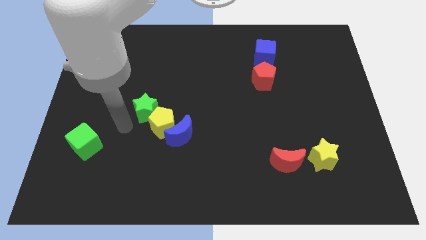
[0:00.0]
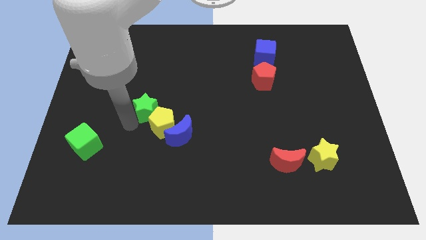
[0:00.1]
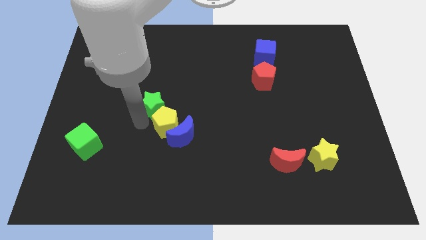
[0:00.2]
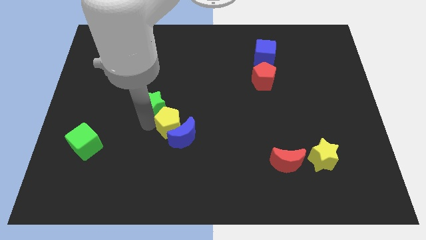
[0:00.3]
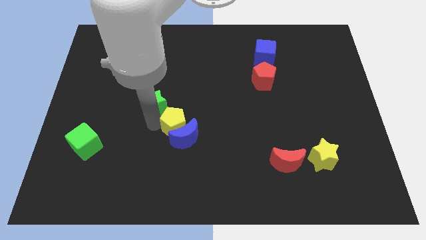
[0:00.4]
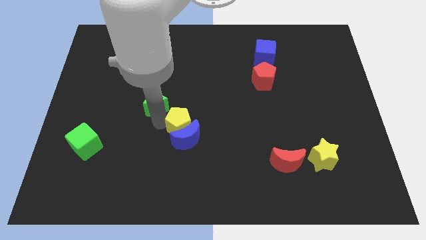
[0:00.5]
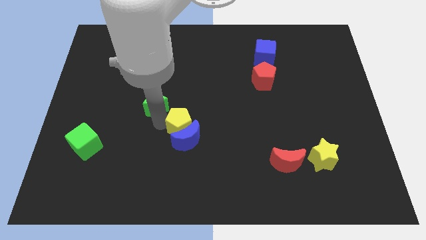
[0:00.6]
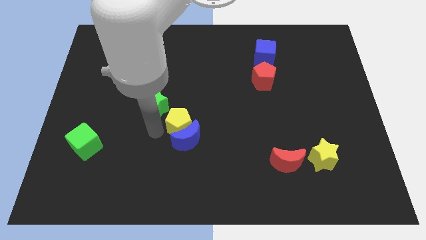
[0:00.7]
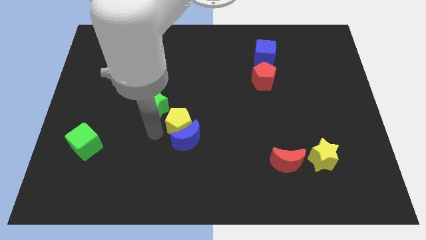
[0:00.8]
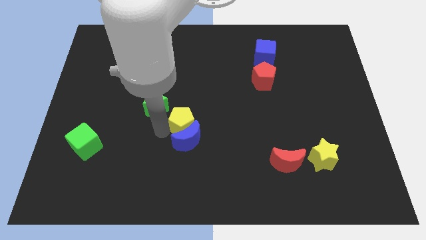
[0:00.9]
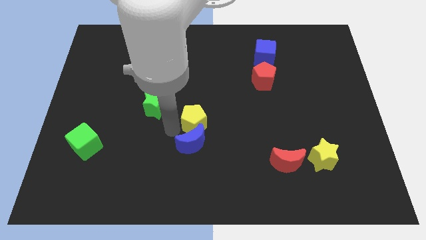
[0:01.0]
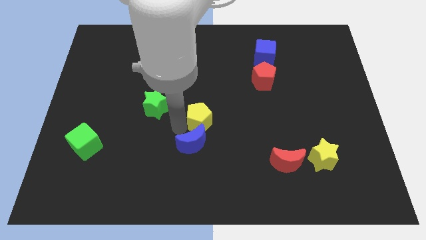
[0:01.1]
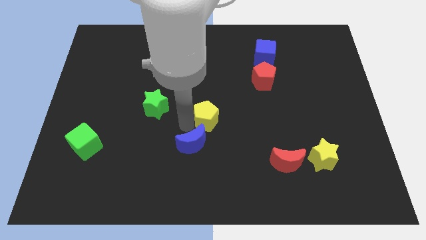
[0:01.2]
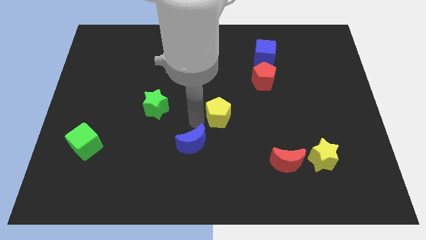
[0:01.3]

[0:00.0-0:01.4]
place yellow pentagon to the center of the board

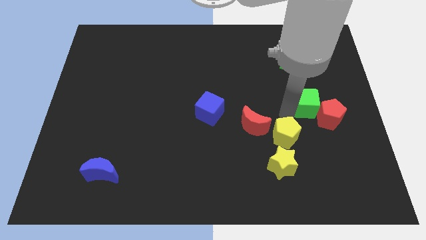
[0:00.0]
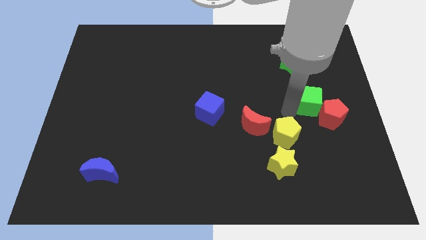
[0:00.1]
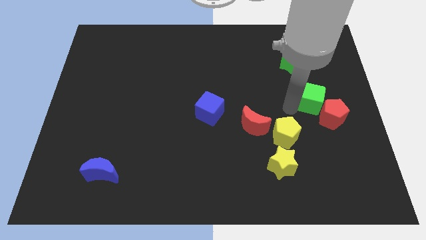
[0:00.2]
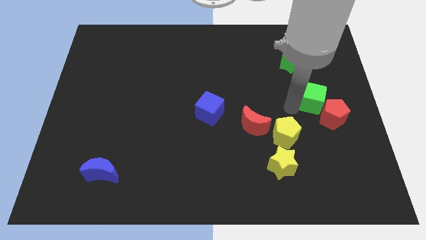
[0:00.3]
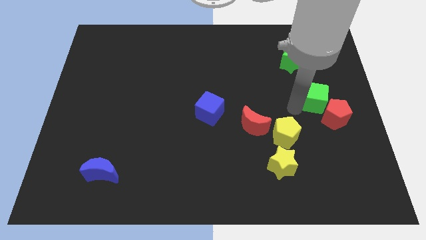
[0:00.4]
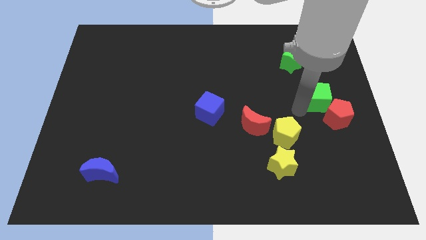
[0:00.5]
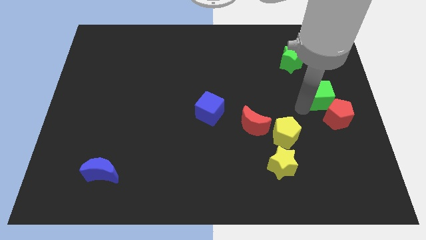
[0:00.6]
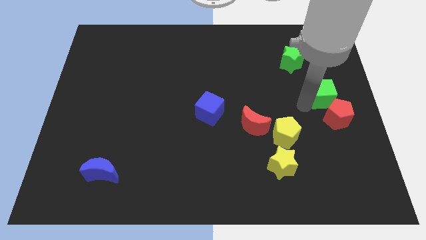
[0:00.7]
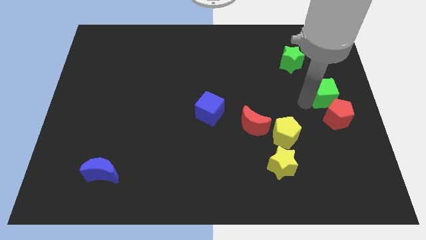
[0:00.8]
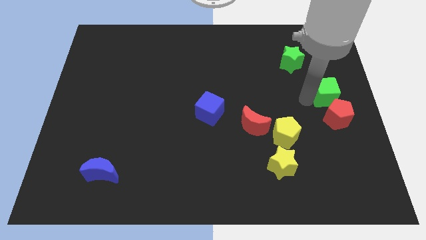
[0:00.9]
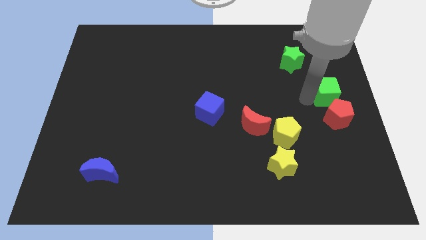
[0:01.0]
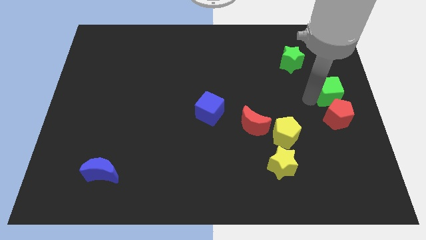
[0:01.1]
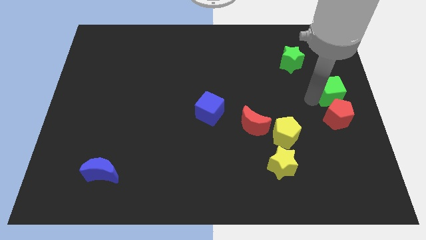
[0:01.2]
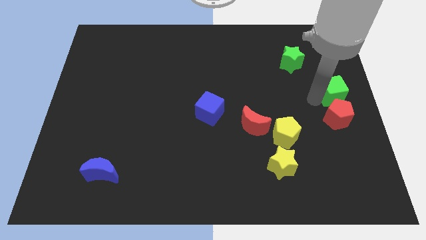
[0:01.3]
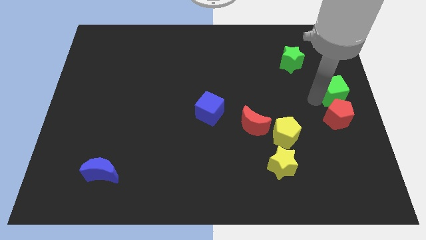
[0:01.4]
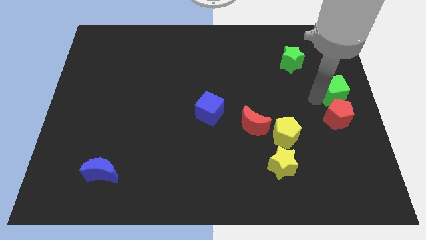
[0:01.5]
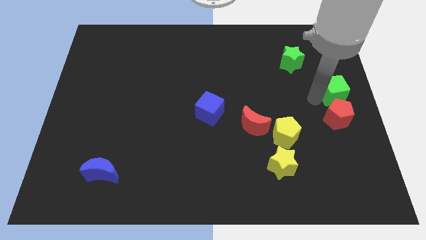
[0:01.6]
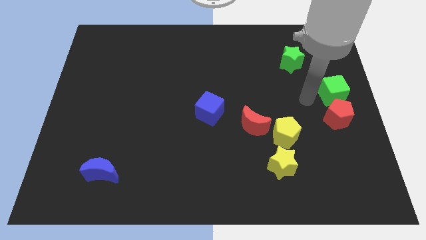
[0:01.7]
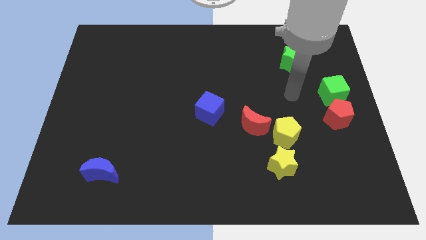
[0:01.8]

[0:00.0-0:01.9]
move the green cube to the top of the red pentagon

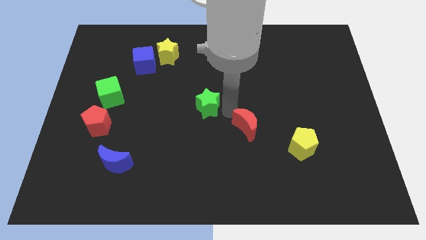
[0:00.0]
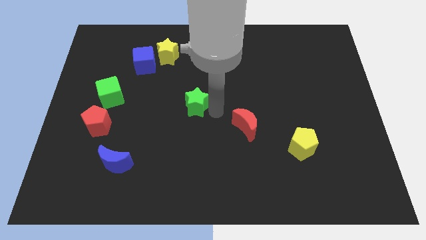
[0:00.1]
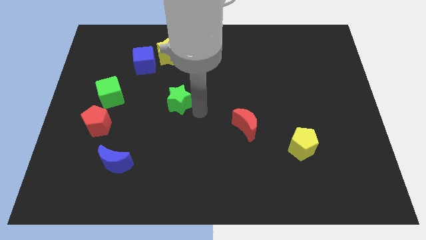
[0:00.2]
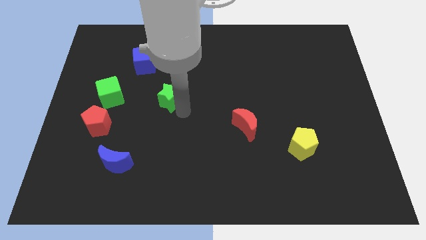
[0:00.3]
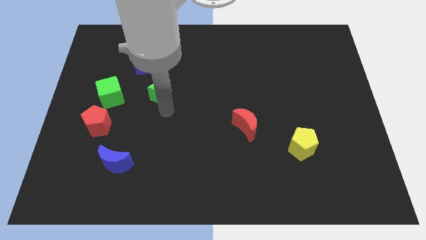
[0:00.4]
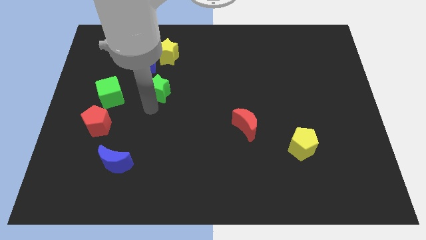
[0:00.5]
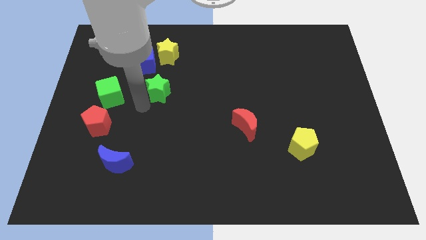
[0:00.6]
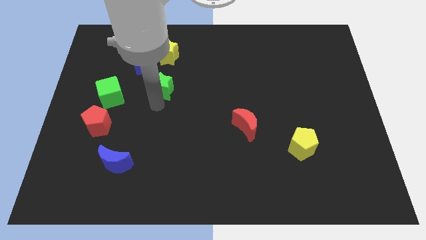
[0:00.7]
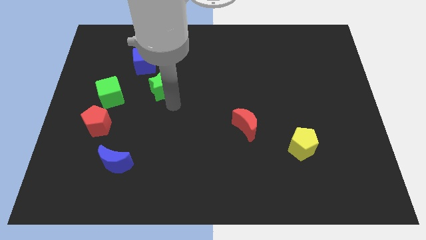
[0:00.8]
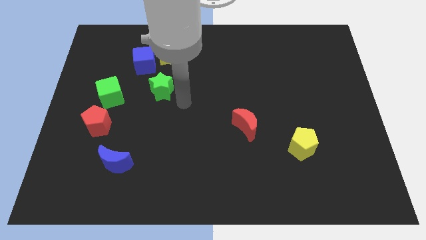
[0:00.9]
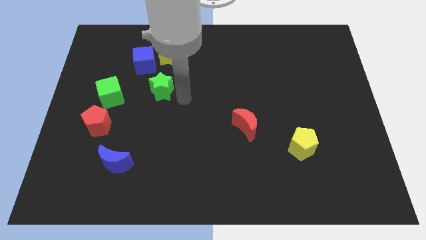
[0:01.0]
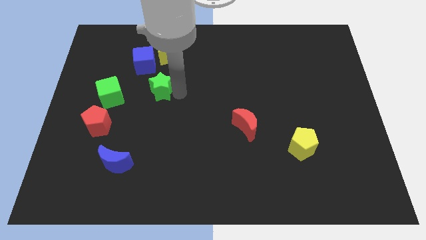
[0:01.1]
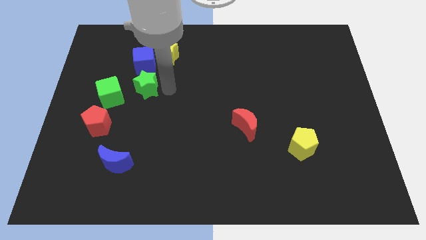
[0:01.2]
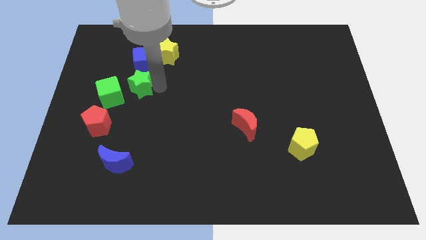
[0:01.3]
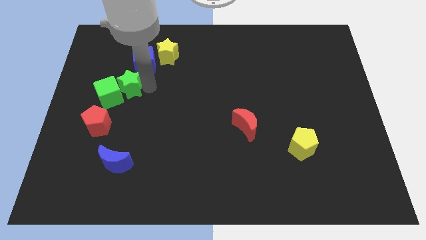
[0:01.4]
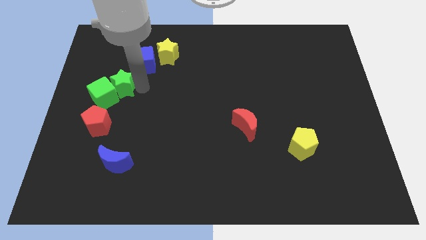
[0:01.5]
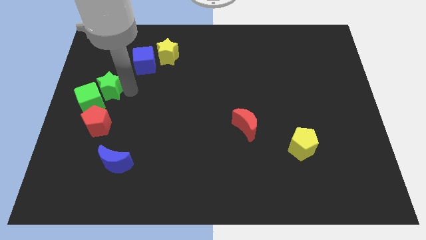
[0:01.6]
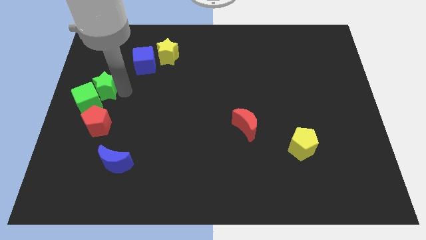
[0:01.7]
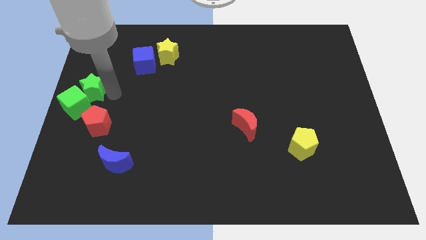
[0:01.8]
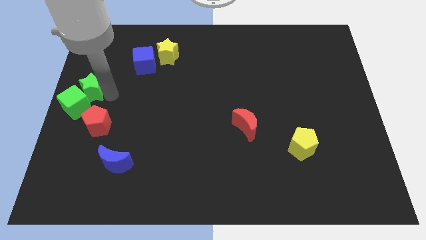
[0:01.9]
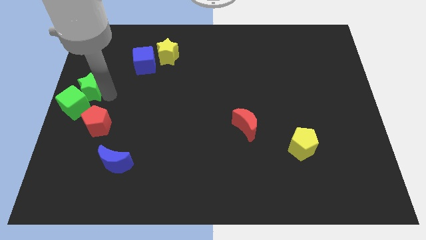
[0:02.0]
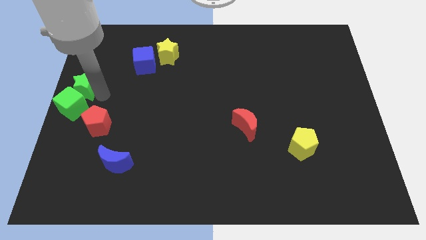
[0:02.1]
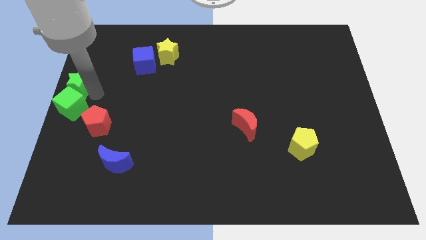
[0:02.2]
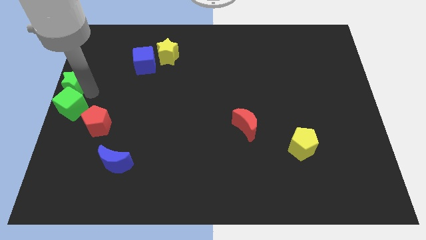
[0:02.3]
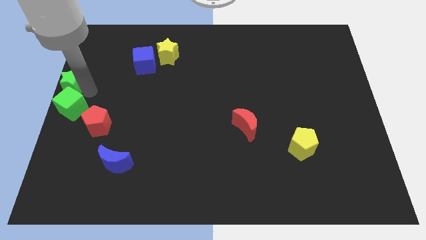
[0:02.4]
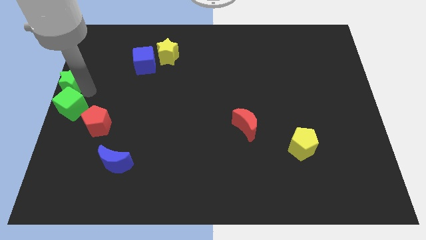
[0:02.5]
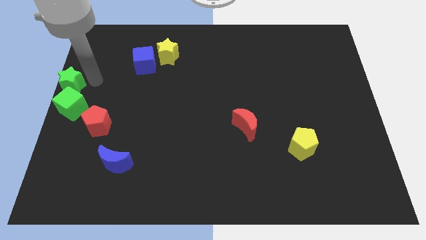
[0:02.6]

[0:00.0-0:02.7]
move the green star above the green cube

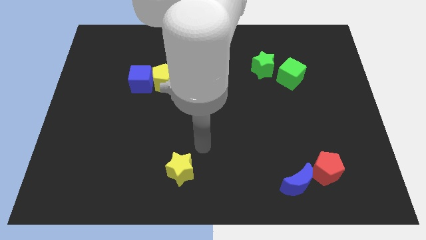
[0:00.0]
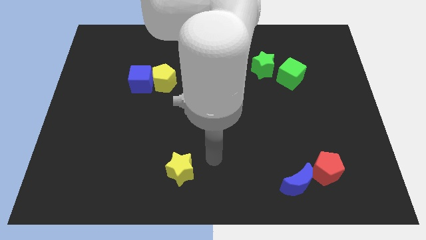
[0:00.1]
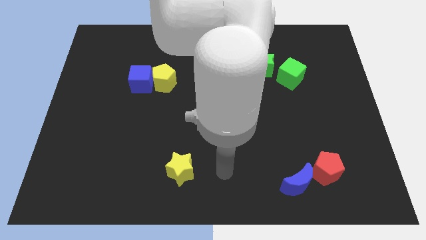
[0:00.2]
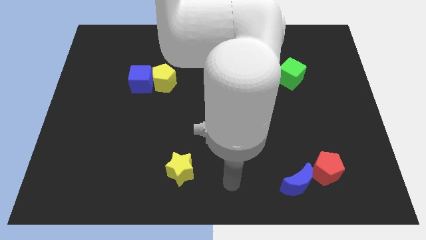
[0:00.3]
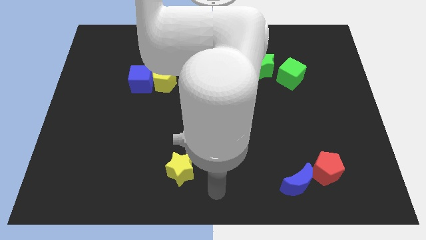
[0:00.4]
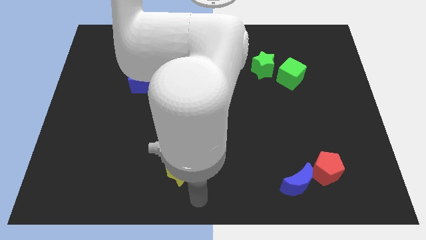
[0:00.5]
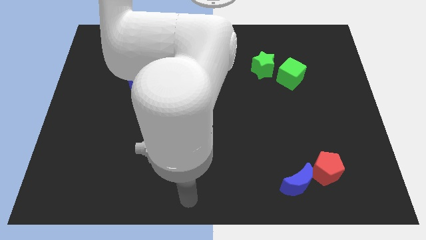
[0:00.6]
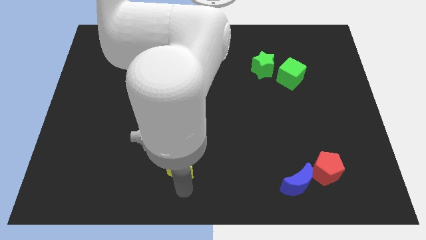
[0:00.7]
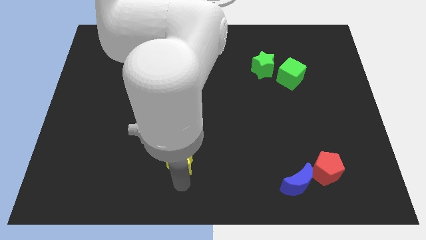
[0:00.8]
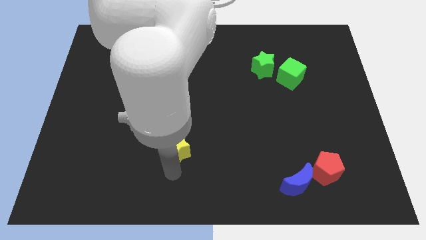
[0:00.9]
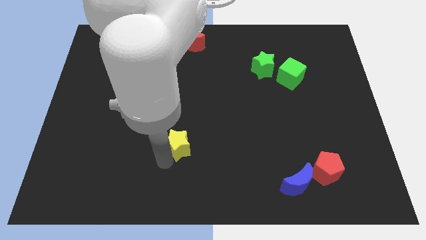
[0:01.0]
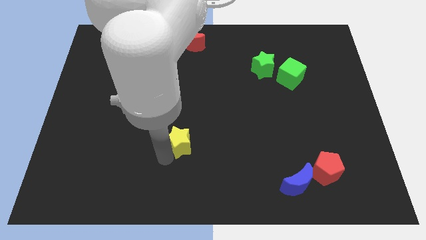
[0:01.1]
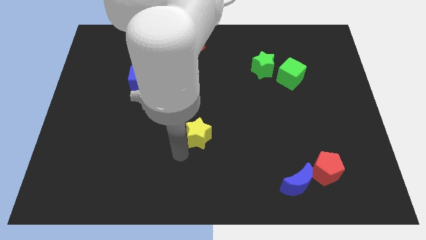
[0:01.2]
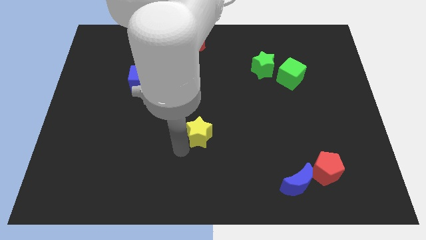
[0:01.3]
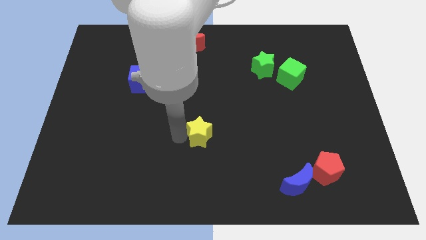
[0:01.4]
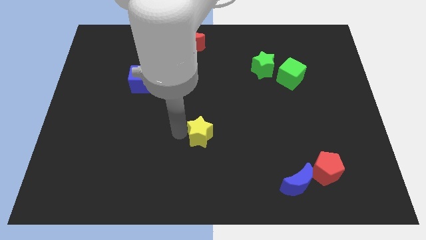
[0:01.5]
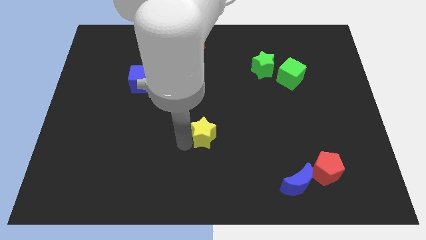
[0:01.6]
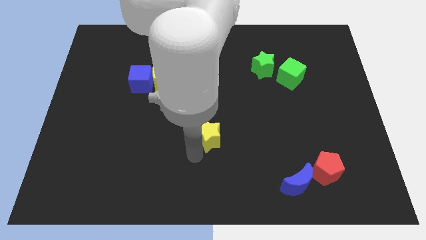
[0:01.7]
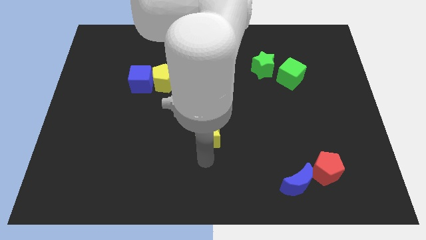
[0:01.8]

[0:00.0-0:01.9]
place the yellow star towards top

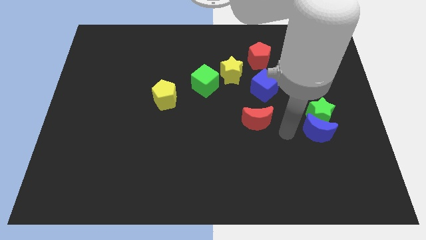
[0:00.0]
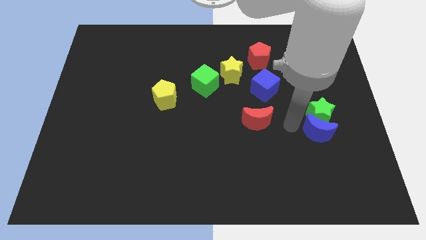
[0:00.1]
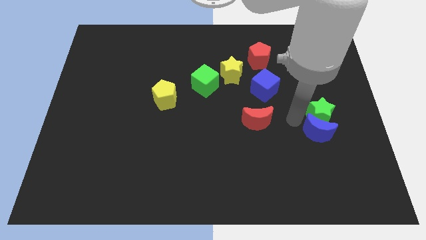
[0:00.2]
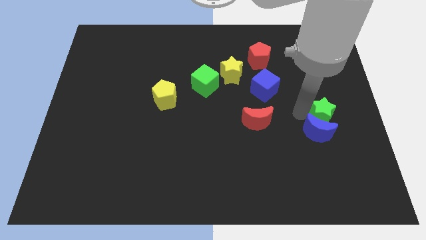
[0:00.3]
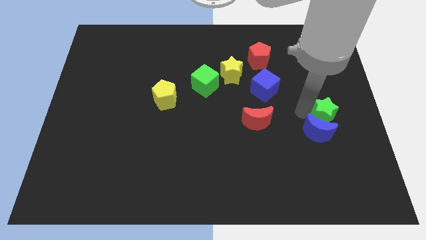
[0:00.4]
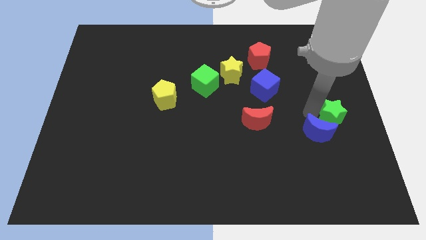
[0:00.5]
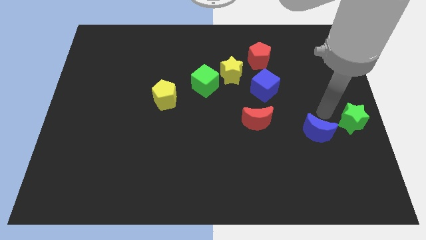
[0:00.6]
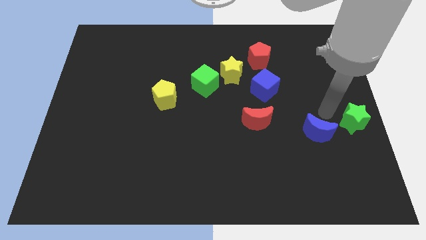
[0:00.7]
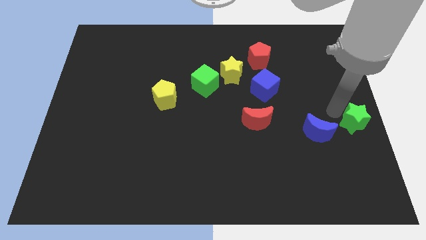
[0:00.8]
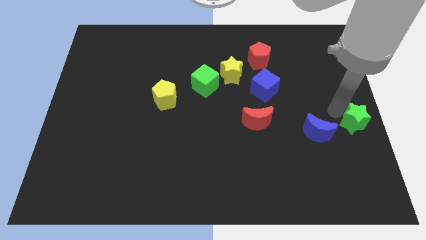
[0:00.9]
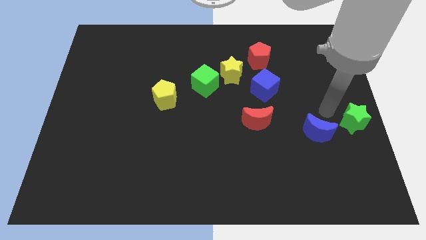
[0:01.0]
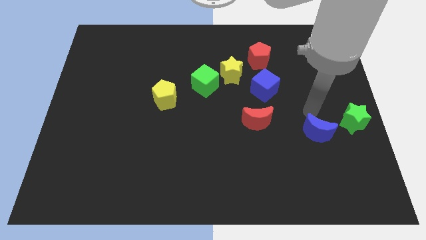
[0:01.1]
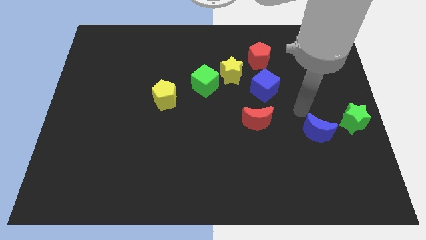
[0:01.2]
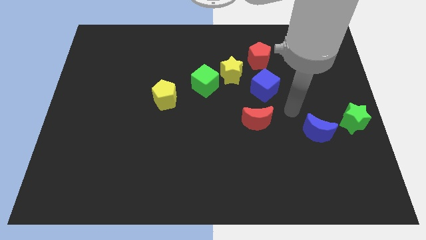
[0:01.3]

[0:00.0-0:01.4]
separate the green star from the blue moon
